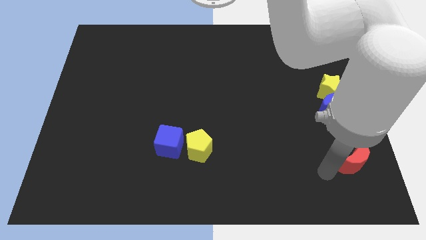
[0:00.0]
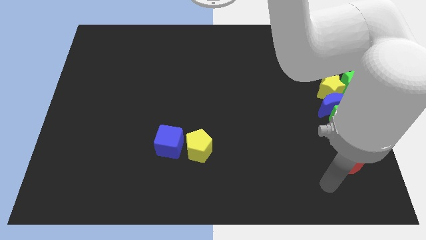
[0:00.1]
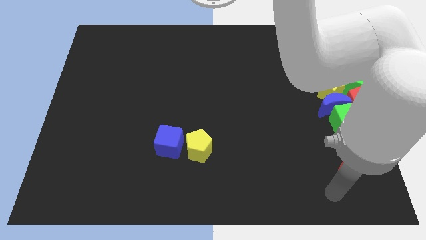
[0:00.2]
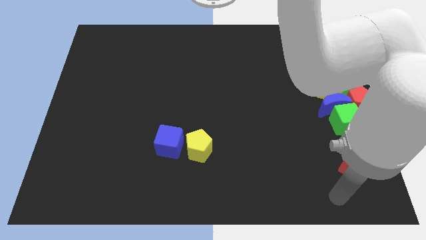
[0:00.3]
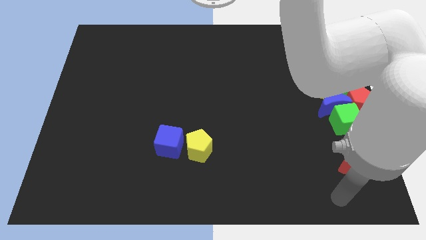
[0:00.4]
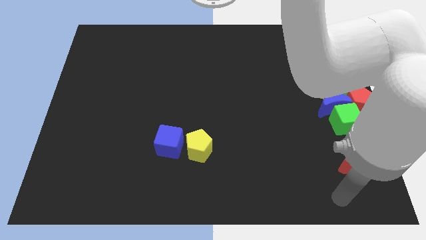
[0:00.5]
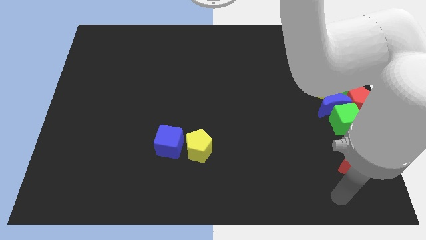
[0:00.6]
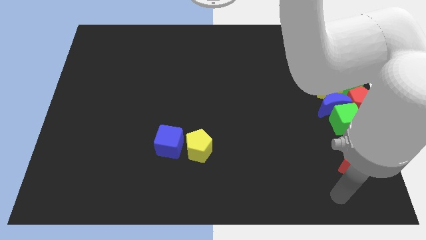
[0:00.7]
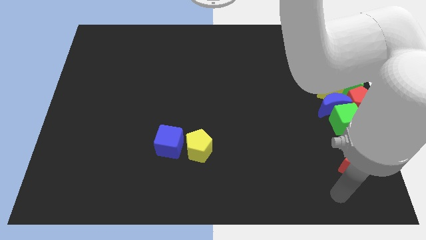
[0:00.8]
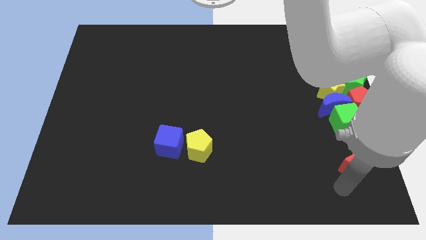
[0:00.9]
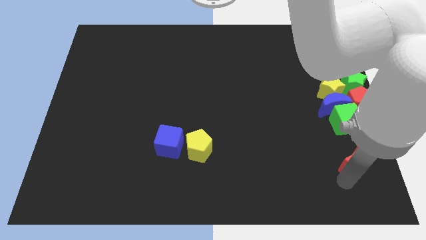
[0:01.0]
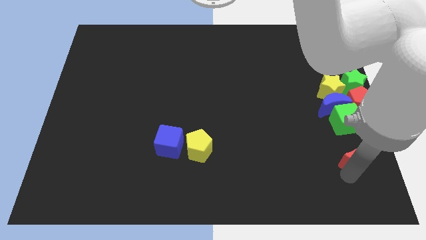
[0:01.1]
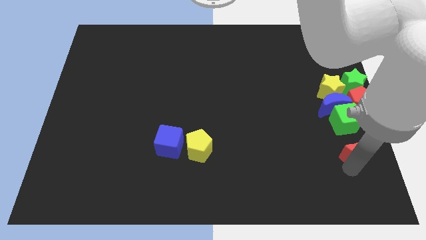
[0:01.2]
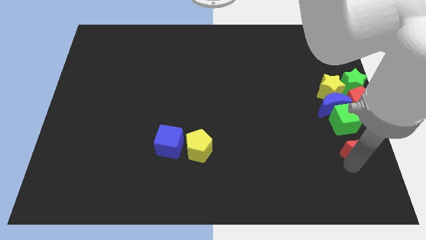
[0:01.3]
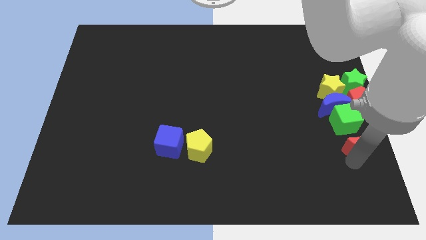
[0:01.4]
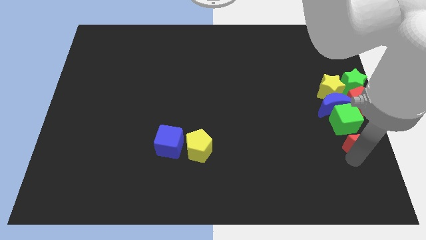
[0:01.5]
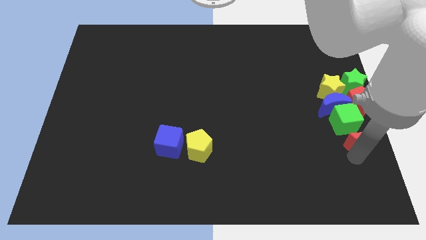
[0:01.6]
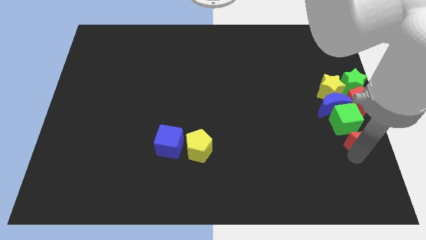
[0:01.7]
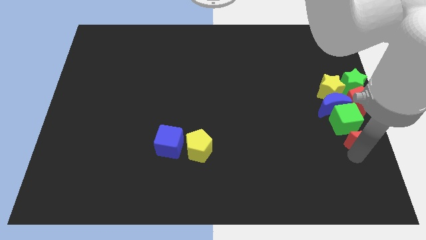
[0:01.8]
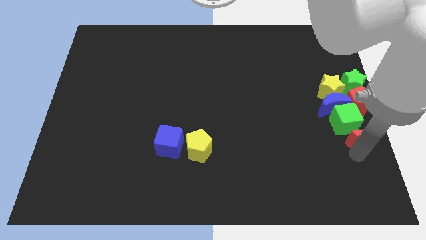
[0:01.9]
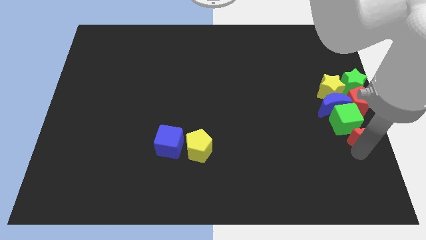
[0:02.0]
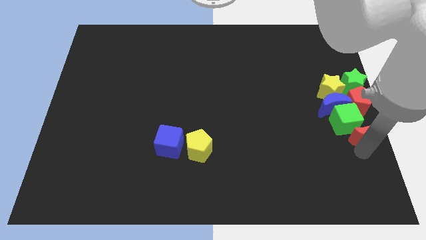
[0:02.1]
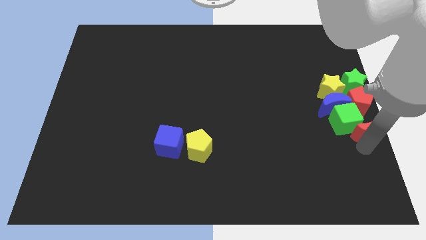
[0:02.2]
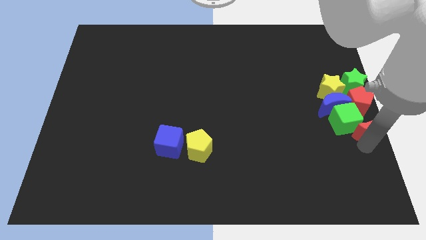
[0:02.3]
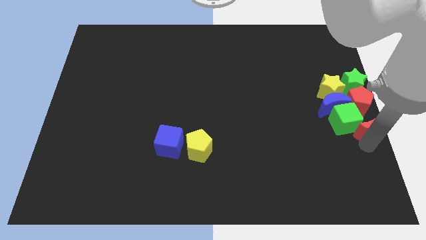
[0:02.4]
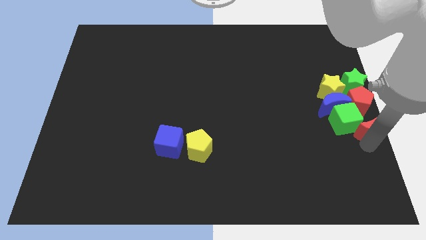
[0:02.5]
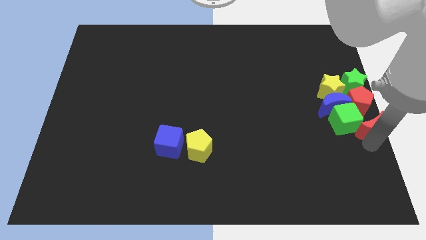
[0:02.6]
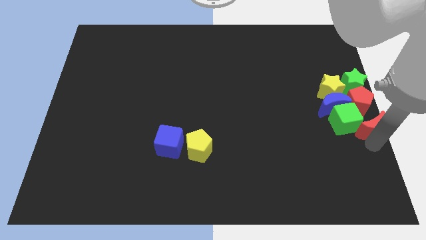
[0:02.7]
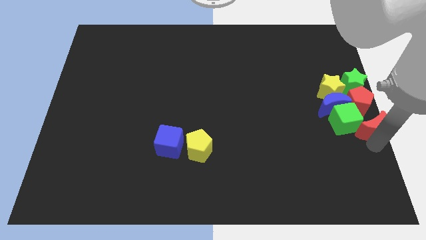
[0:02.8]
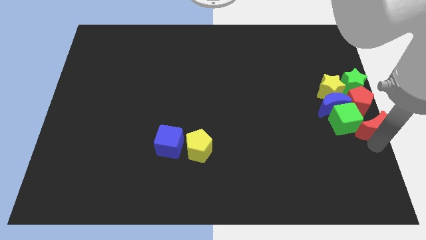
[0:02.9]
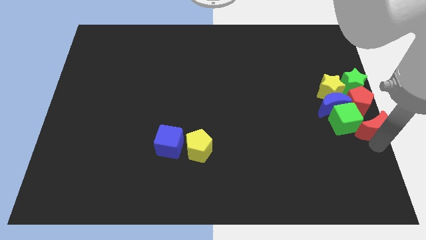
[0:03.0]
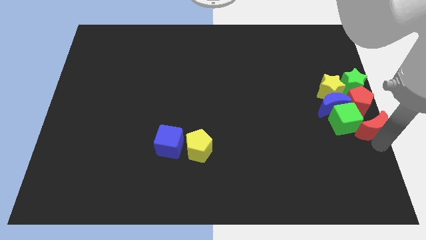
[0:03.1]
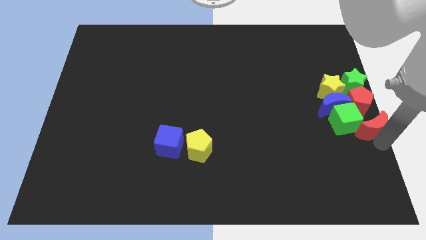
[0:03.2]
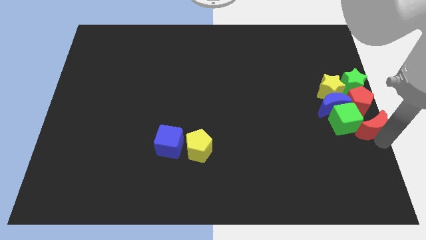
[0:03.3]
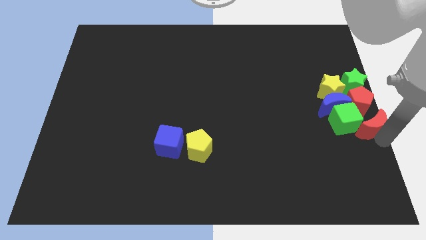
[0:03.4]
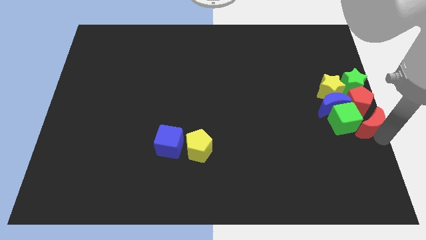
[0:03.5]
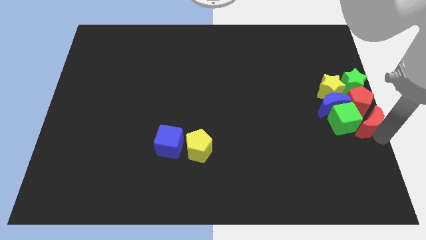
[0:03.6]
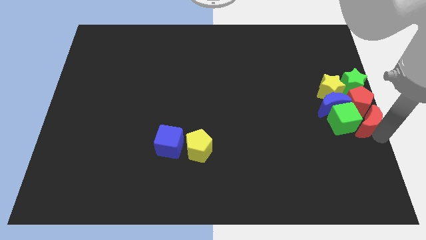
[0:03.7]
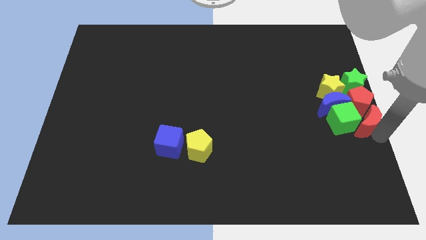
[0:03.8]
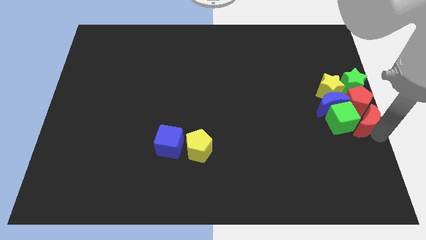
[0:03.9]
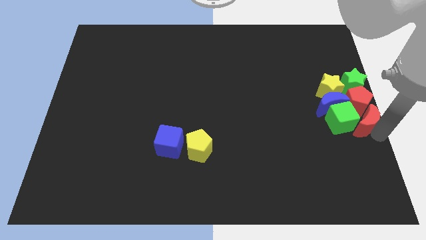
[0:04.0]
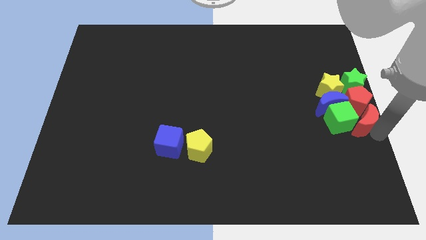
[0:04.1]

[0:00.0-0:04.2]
push the red crescent to the right of the green cube

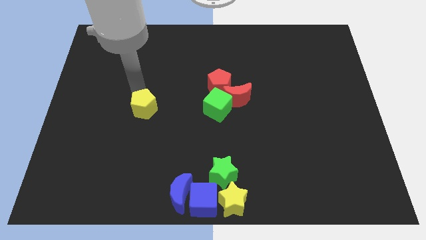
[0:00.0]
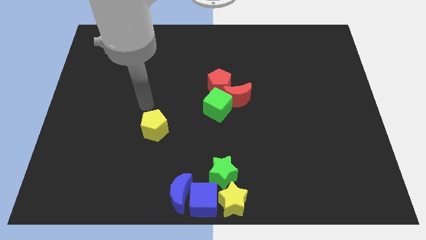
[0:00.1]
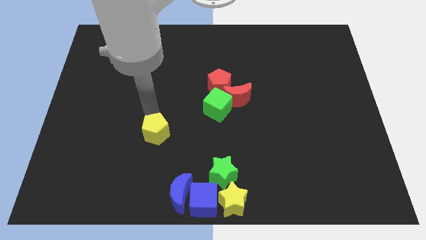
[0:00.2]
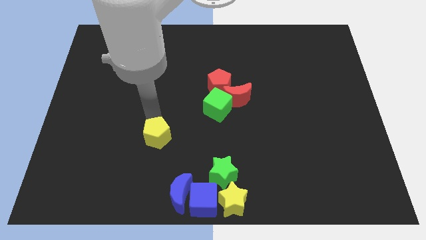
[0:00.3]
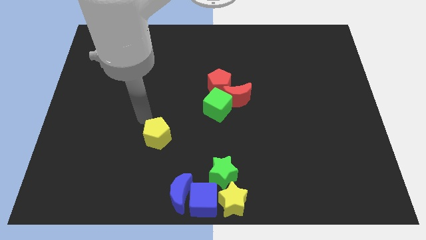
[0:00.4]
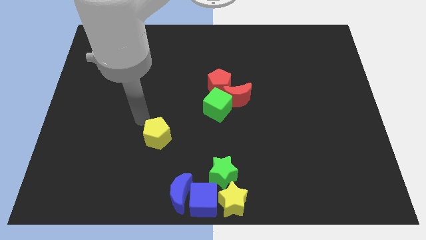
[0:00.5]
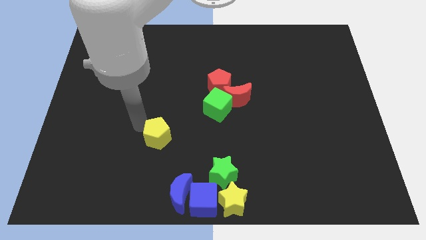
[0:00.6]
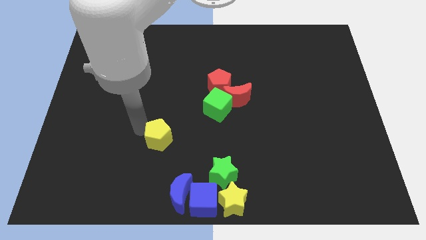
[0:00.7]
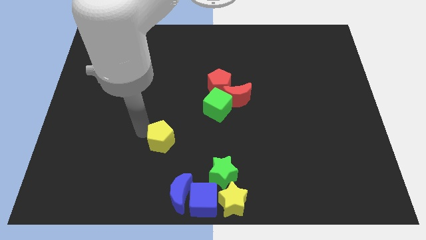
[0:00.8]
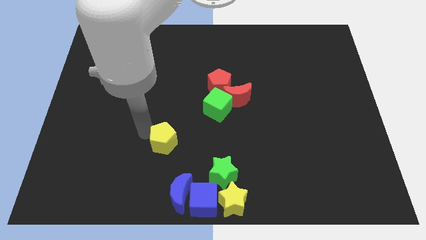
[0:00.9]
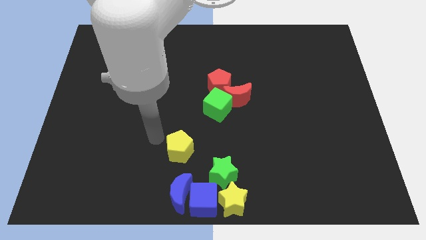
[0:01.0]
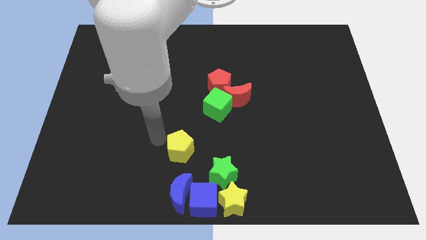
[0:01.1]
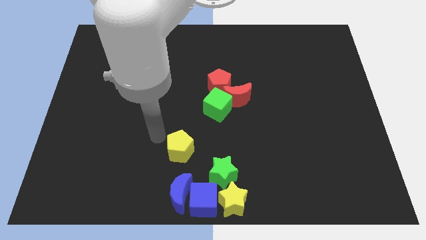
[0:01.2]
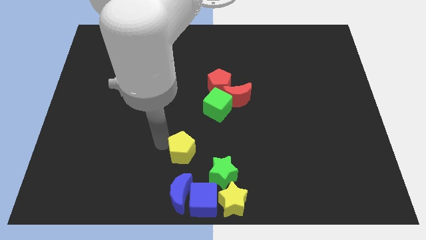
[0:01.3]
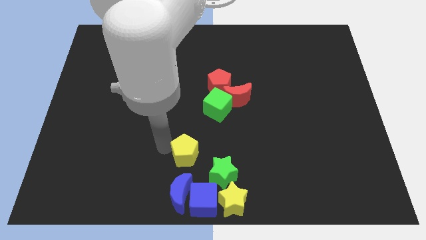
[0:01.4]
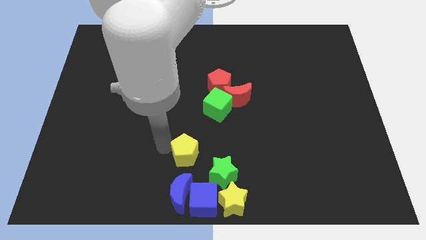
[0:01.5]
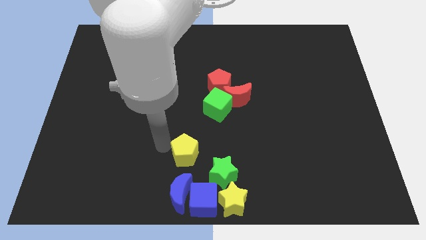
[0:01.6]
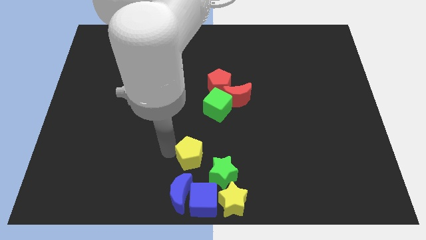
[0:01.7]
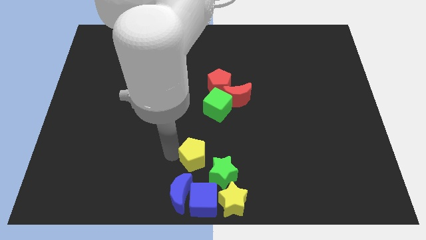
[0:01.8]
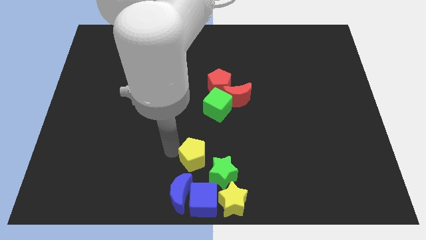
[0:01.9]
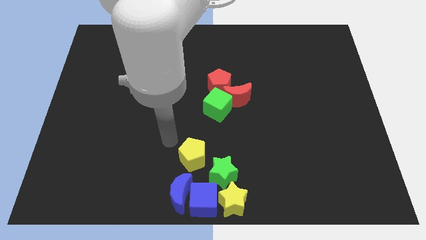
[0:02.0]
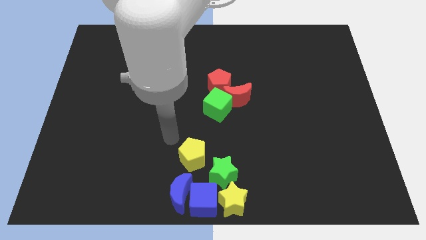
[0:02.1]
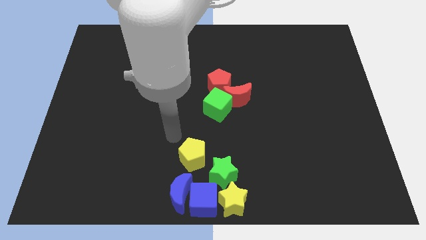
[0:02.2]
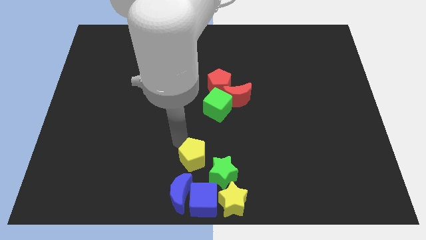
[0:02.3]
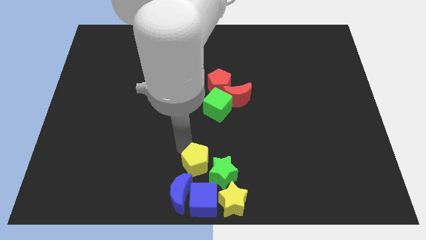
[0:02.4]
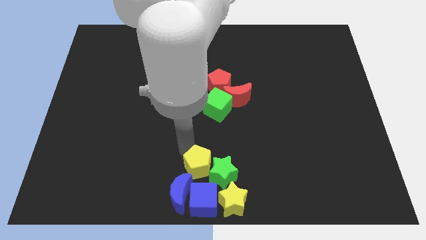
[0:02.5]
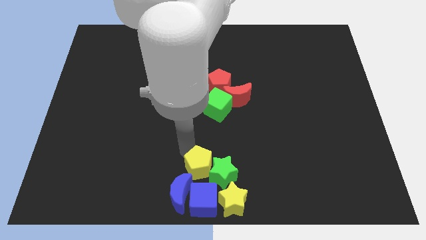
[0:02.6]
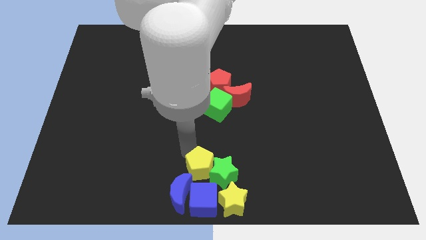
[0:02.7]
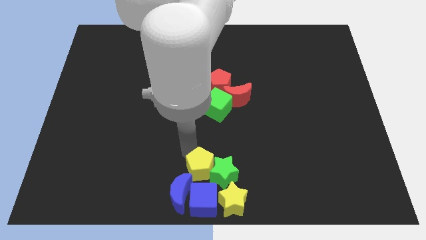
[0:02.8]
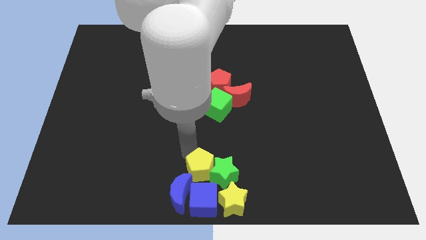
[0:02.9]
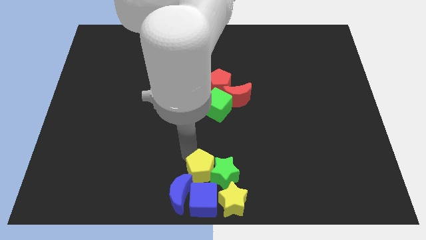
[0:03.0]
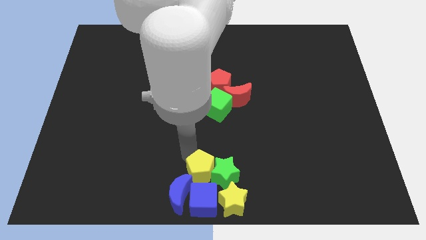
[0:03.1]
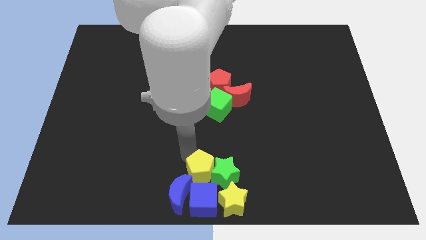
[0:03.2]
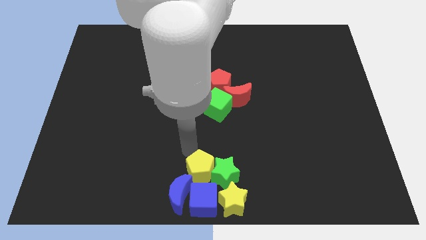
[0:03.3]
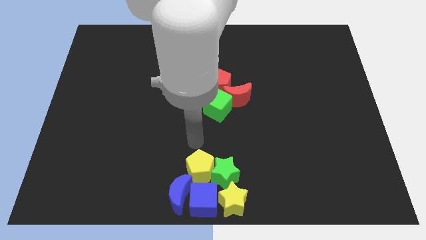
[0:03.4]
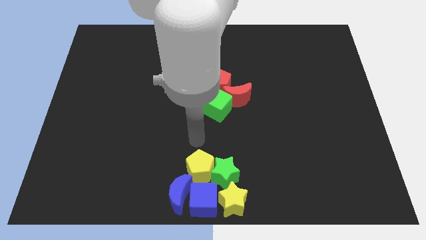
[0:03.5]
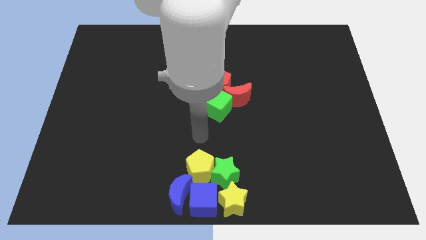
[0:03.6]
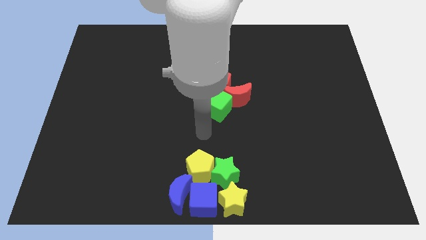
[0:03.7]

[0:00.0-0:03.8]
move the yellow pentagon into the green star

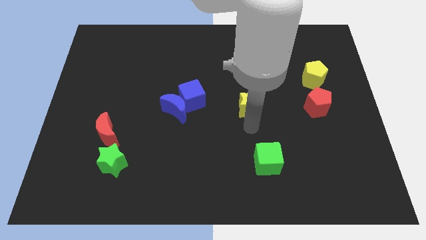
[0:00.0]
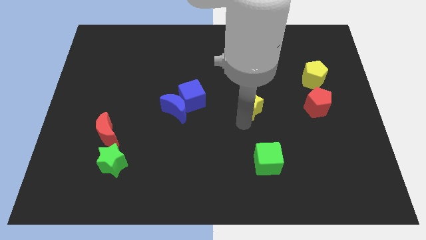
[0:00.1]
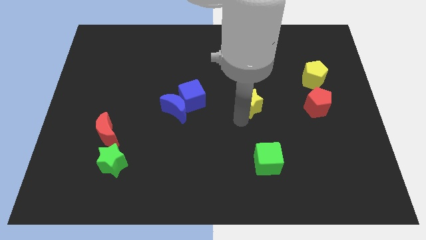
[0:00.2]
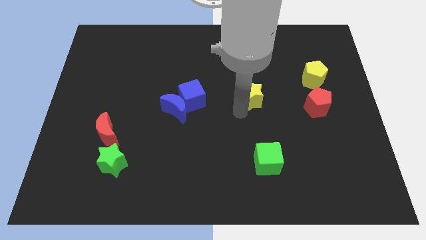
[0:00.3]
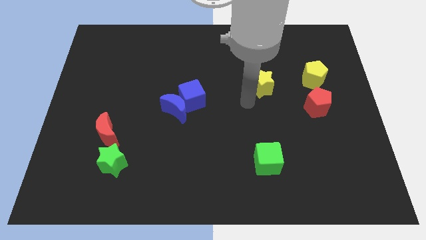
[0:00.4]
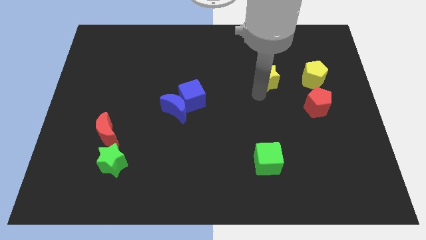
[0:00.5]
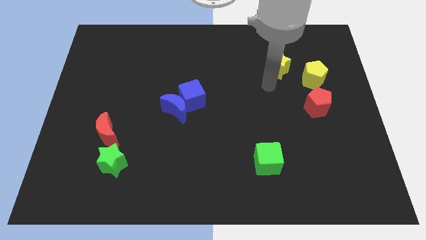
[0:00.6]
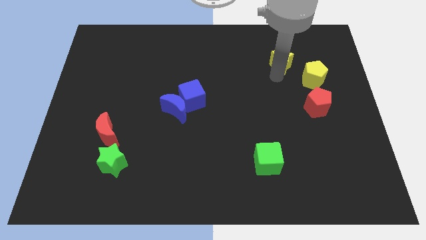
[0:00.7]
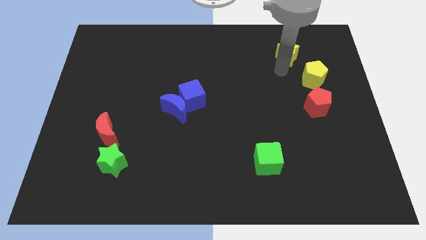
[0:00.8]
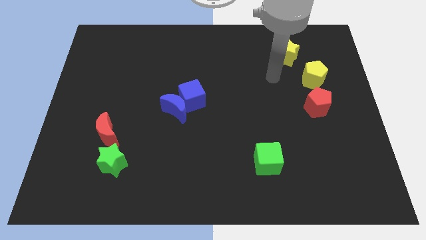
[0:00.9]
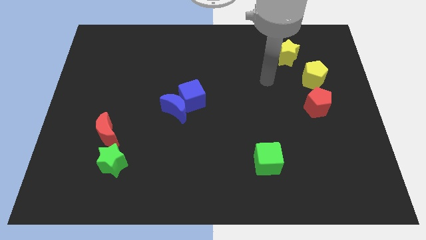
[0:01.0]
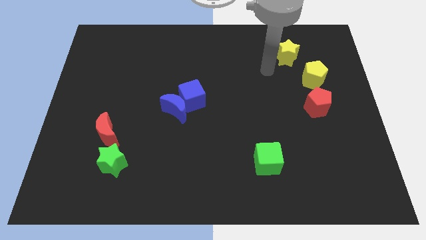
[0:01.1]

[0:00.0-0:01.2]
move yellow star diagonally above the yellow pentagon
